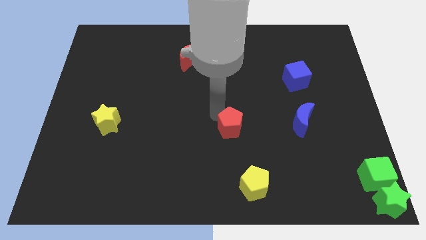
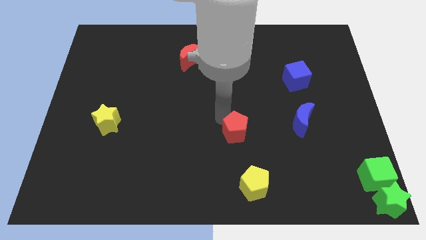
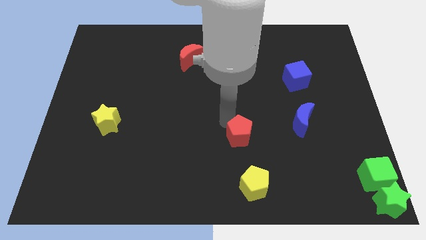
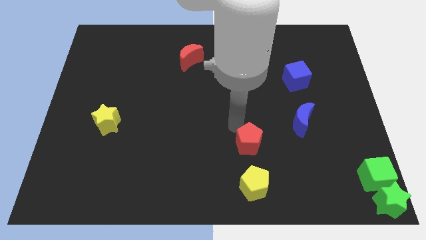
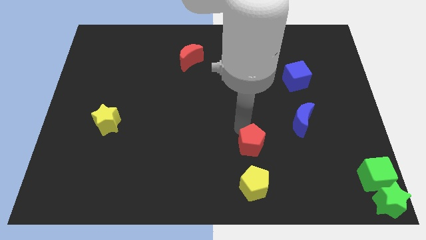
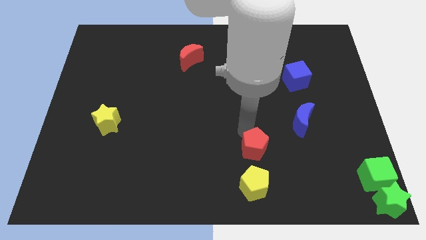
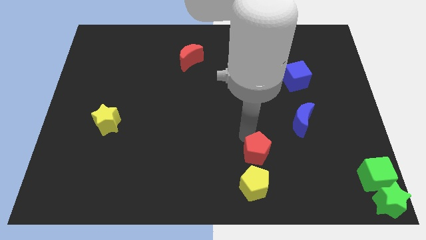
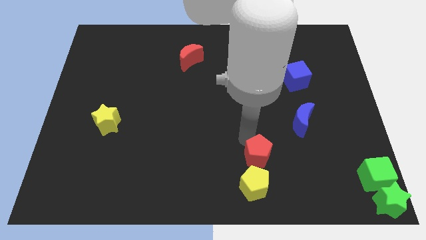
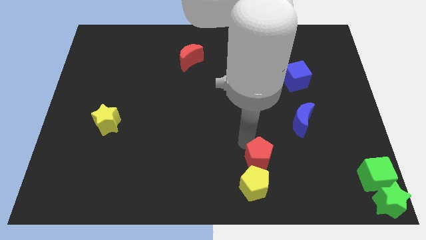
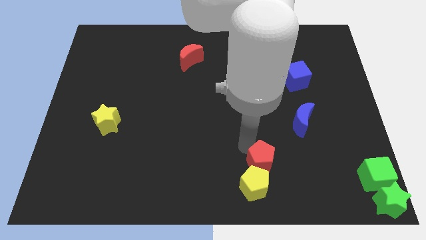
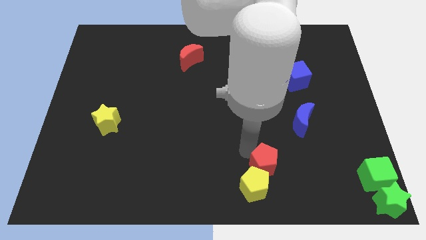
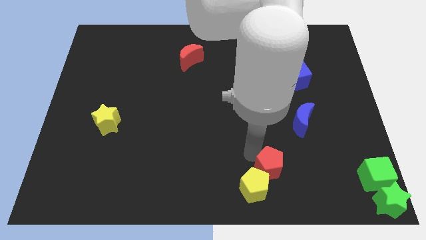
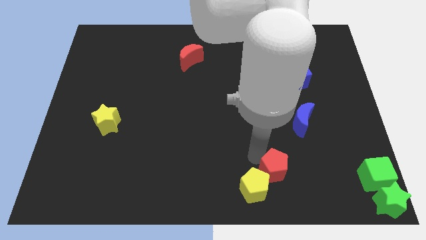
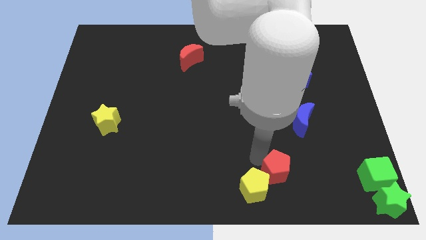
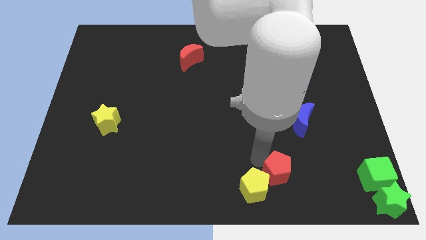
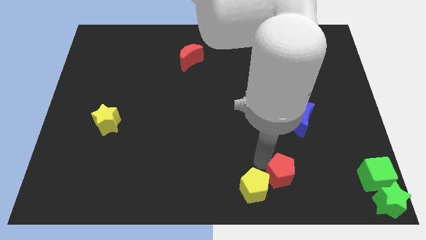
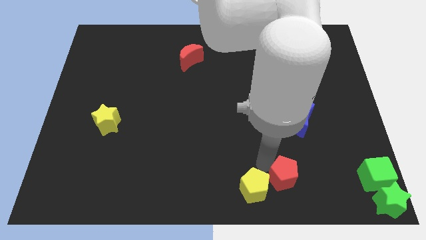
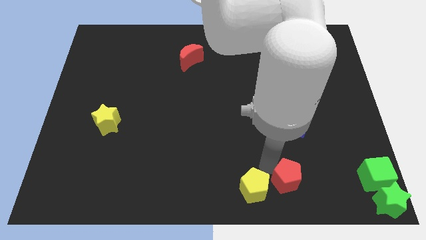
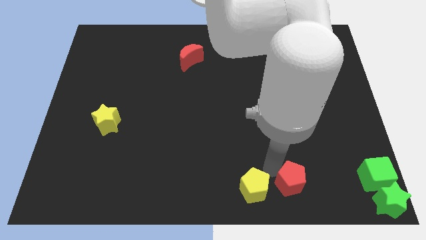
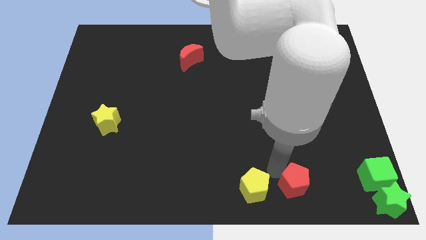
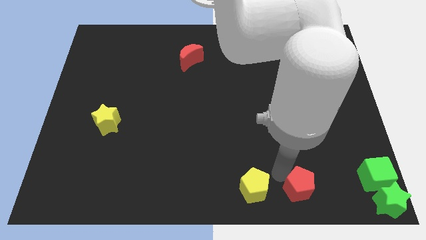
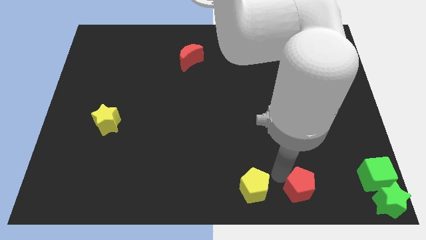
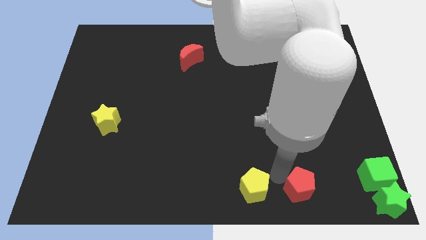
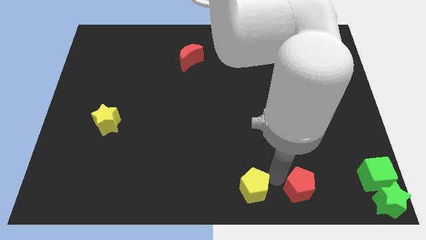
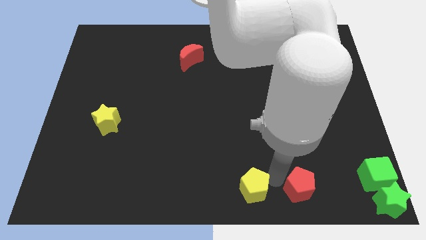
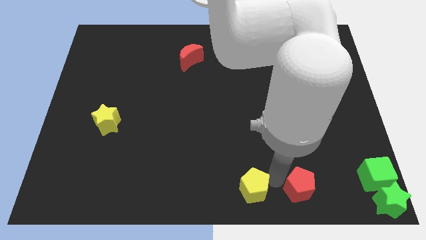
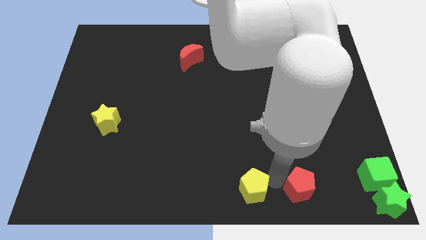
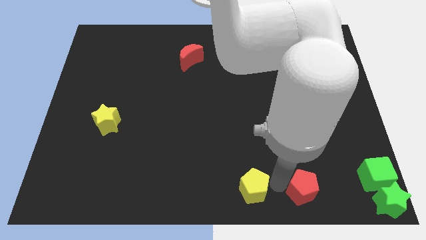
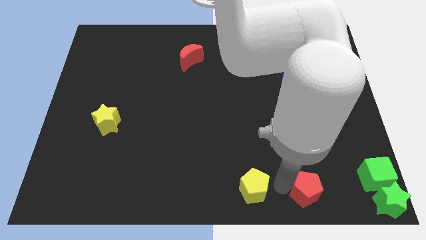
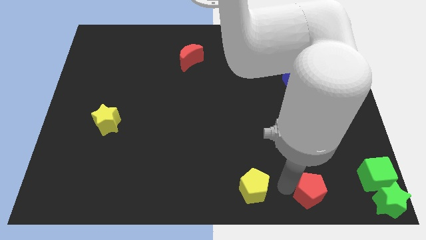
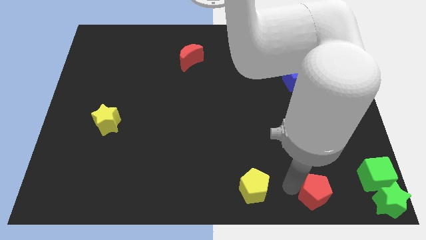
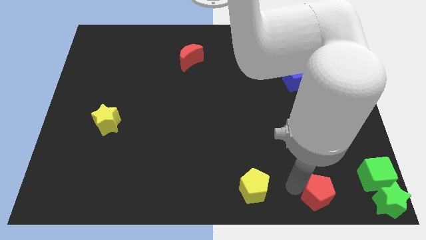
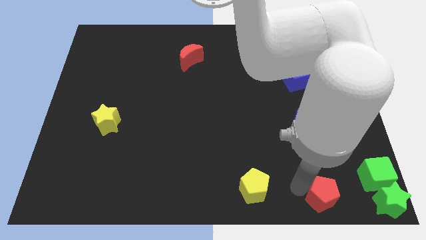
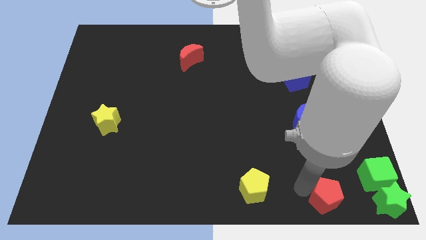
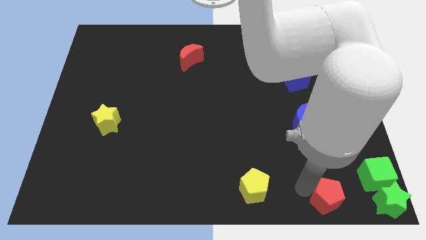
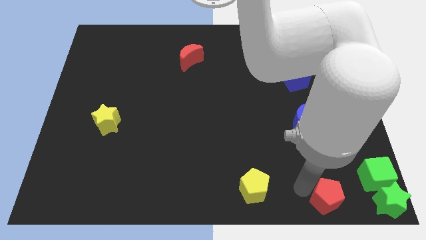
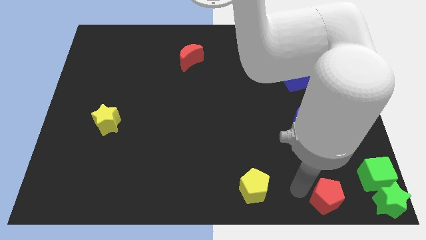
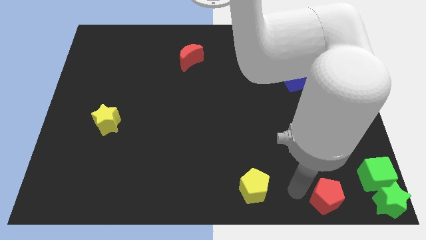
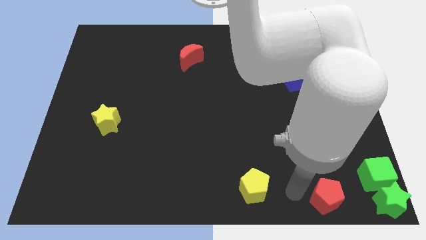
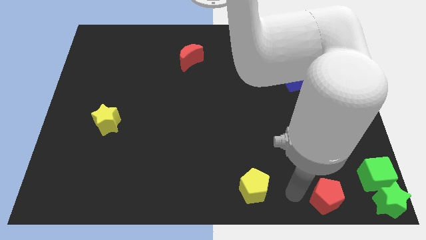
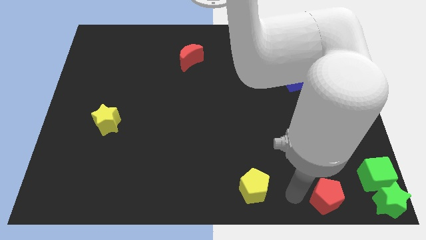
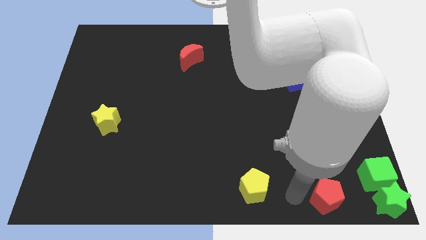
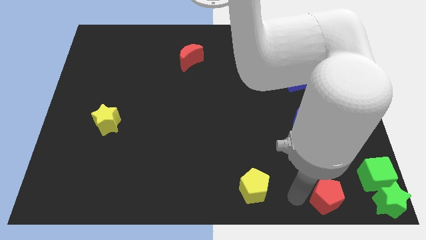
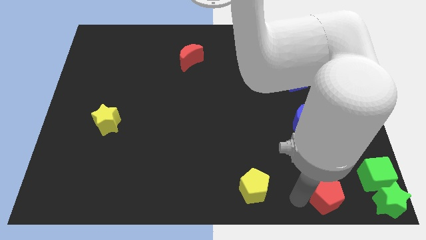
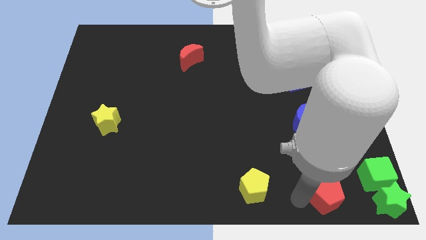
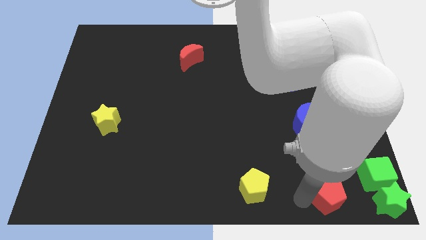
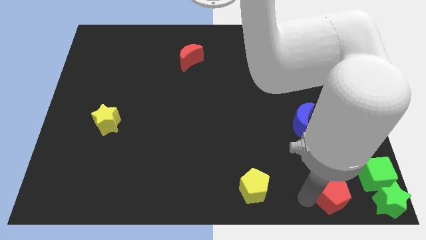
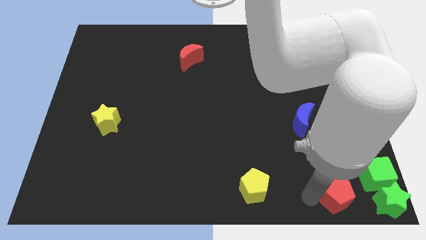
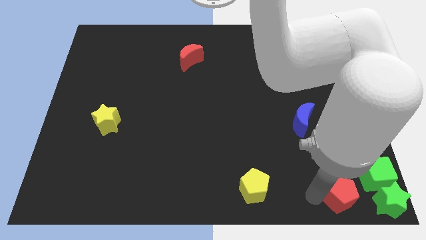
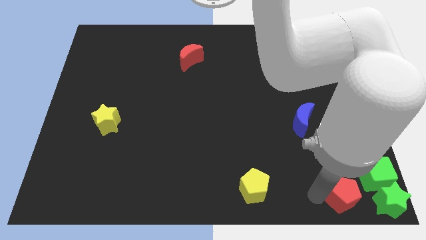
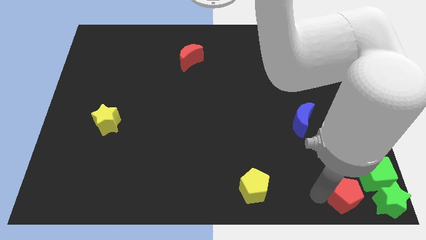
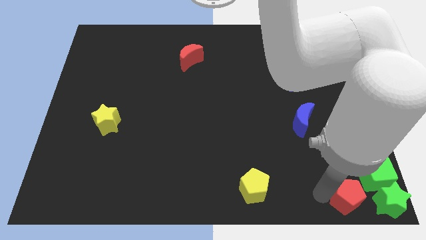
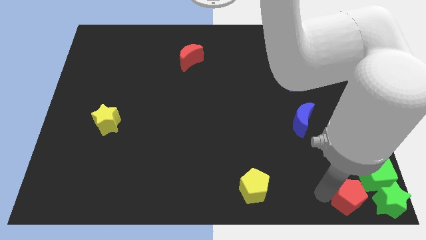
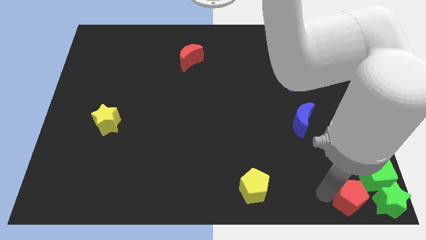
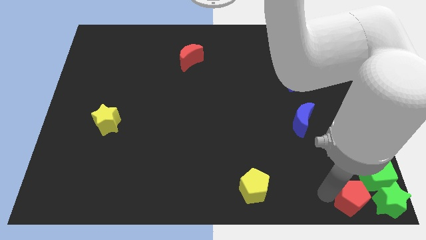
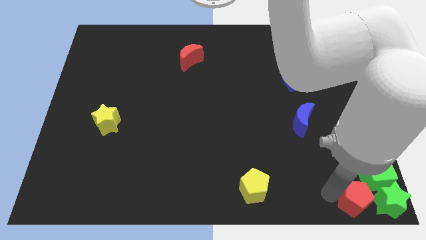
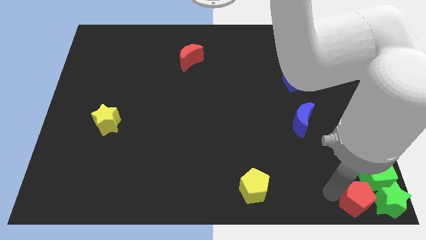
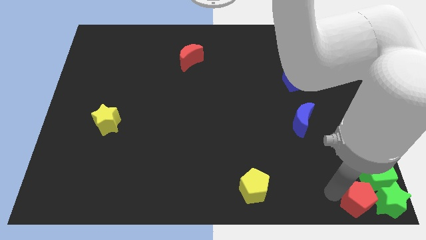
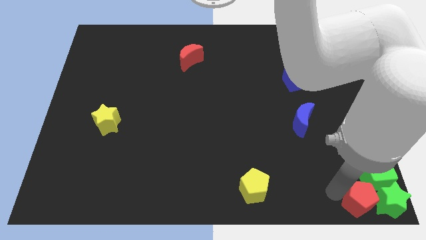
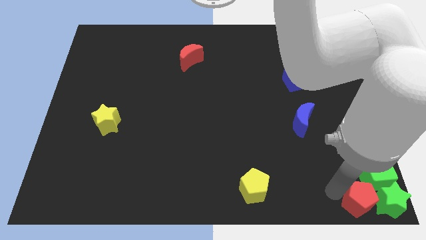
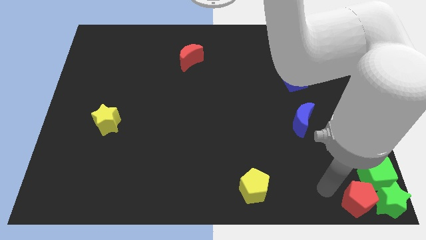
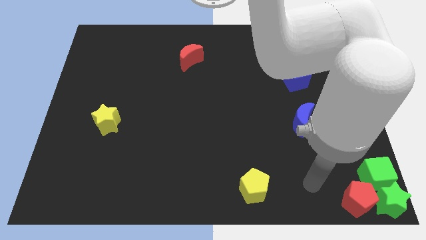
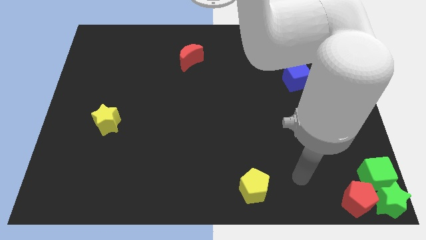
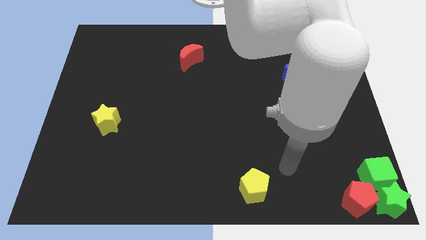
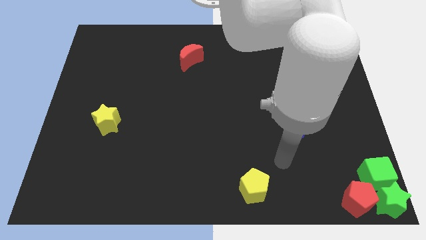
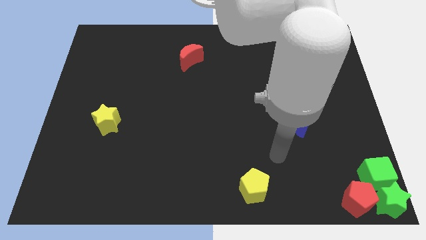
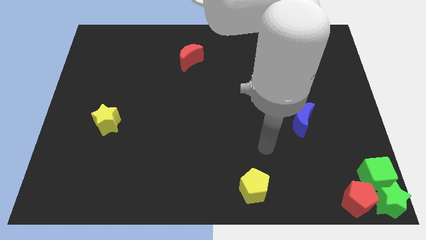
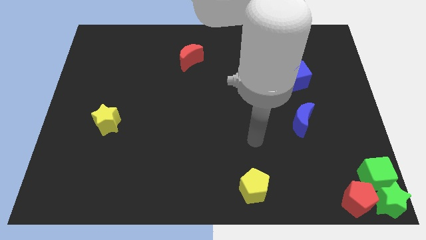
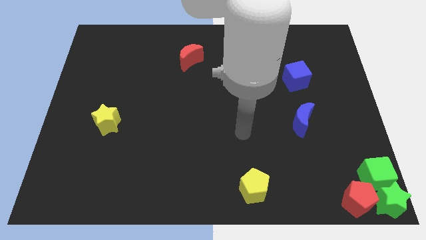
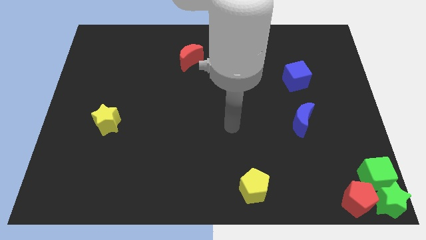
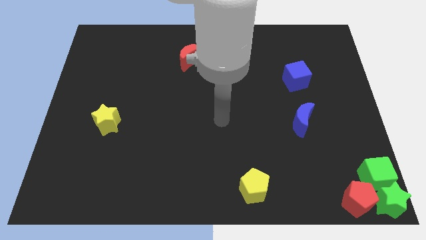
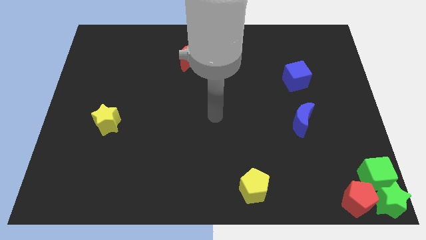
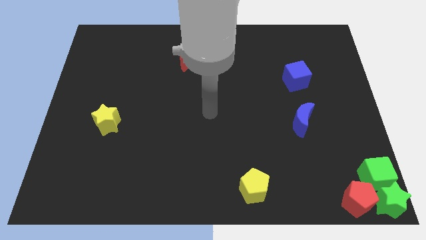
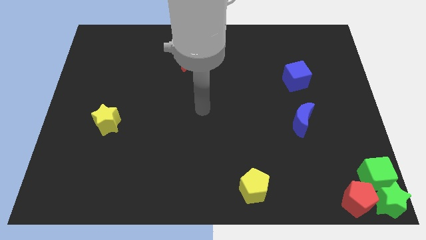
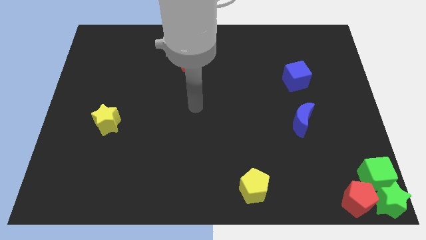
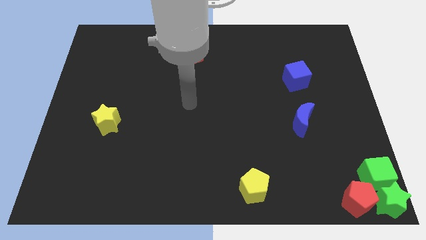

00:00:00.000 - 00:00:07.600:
move the red pentagon to the left of the green star

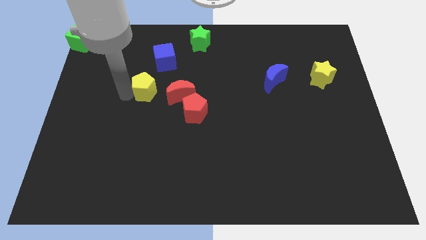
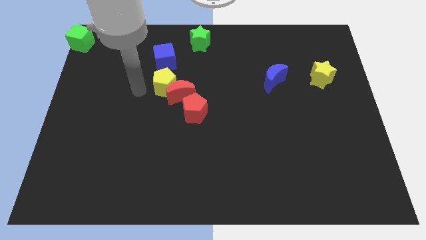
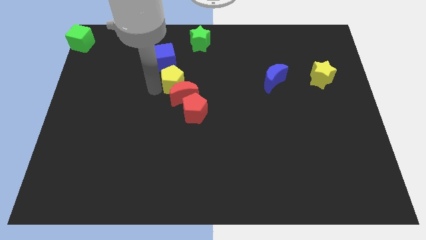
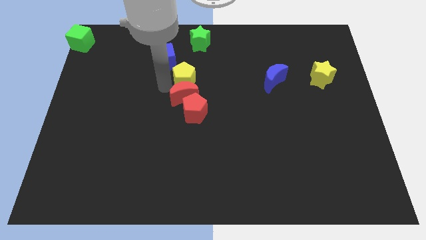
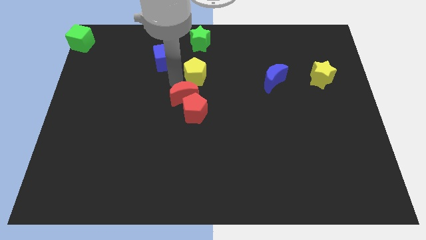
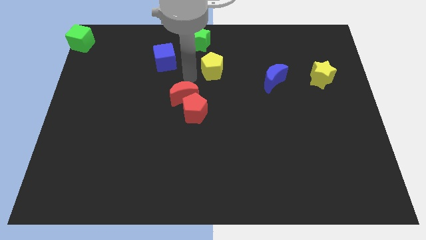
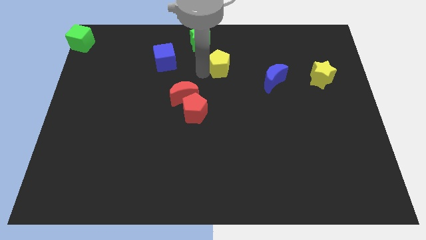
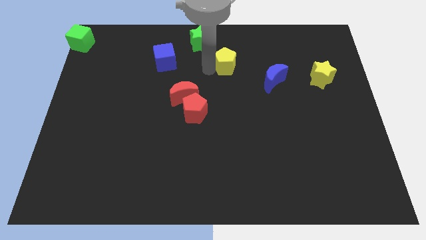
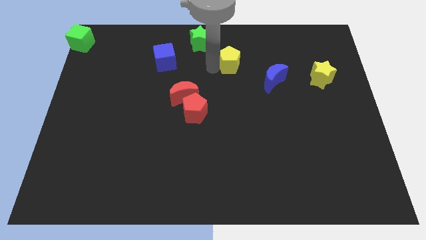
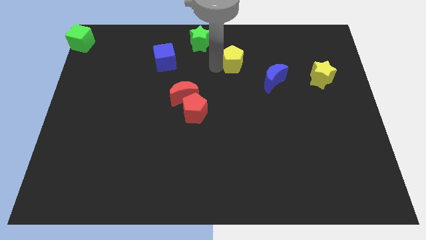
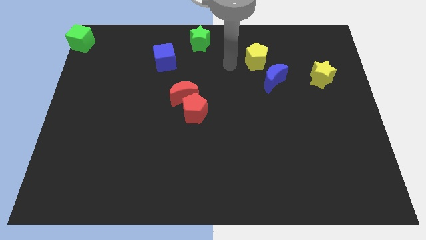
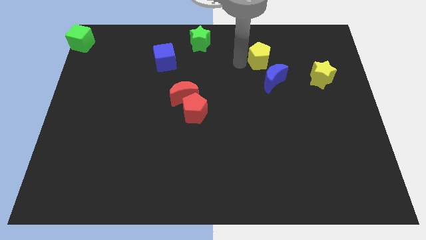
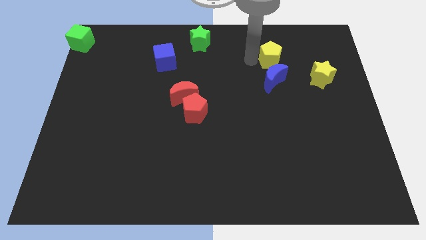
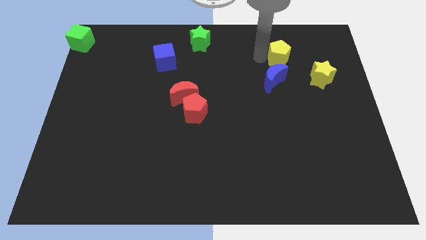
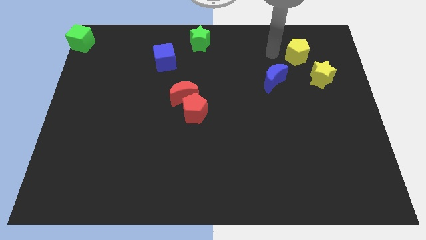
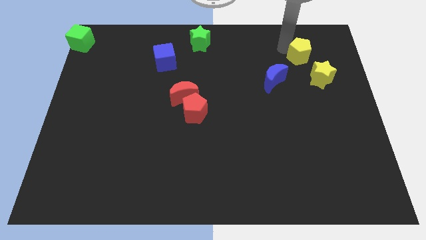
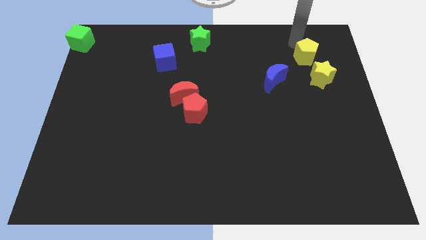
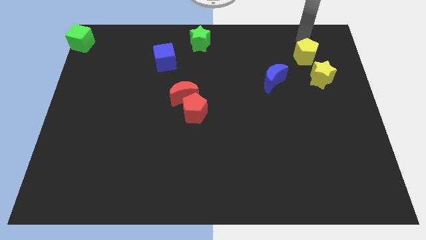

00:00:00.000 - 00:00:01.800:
move the yellow pentagon towards the top right
